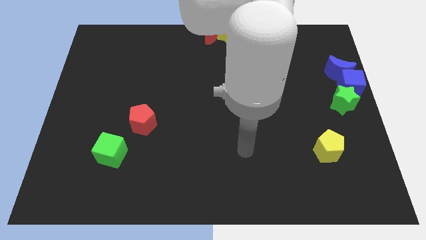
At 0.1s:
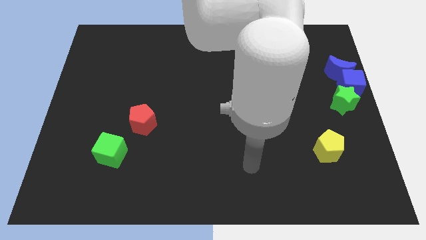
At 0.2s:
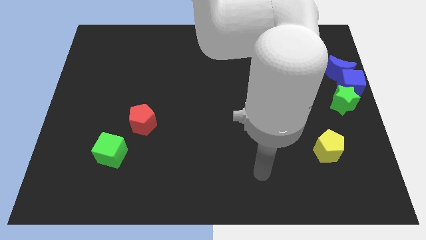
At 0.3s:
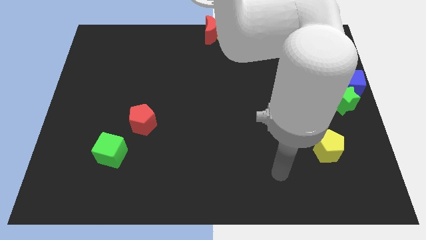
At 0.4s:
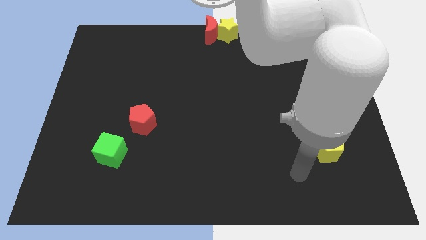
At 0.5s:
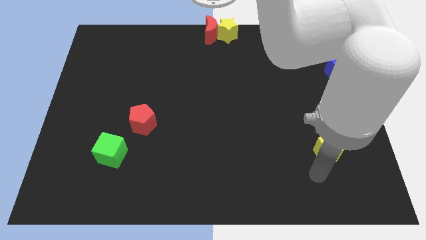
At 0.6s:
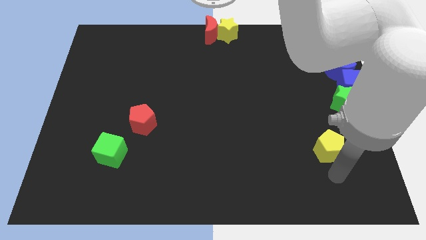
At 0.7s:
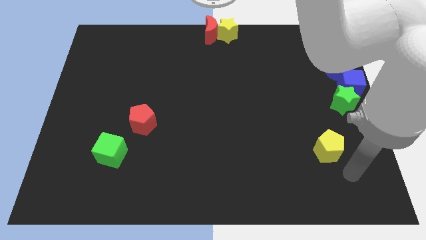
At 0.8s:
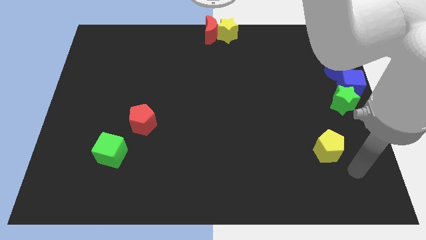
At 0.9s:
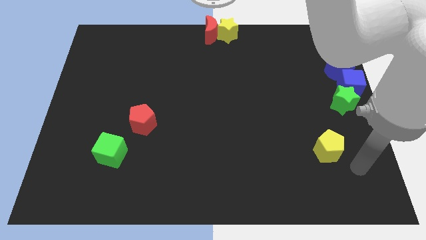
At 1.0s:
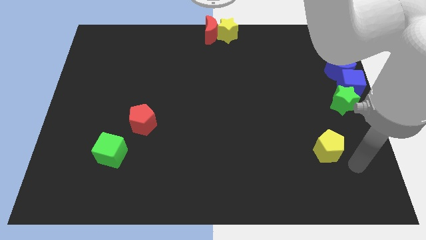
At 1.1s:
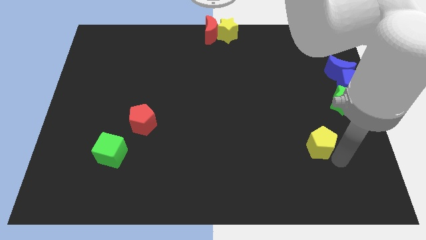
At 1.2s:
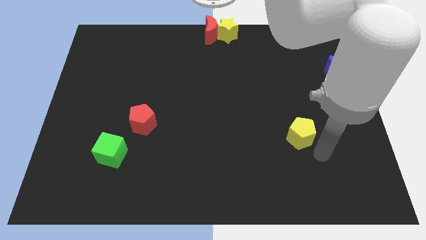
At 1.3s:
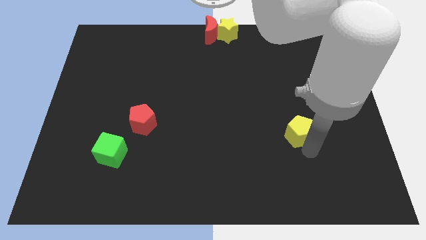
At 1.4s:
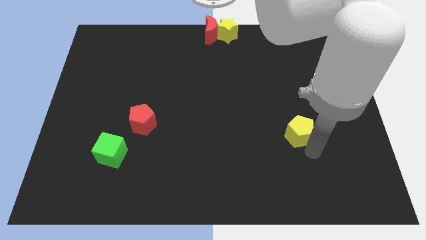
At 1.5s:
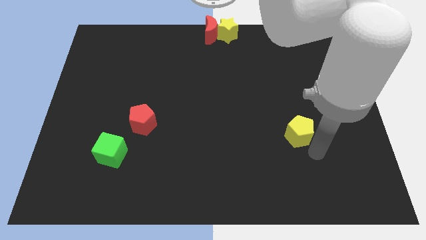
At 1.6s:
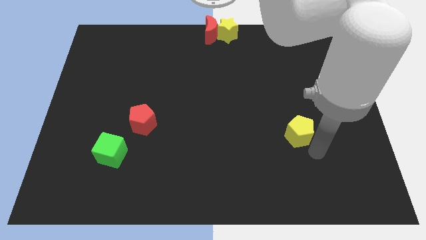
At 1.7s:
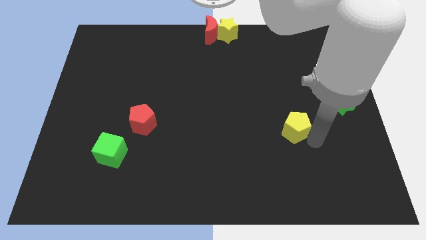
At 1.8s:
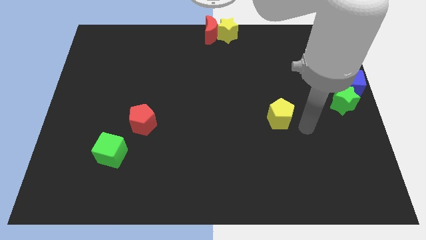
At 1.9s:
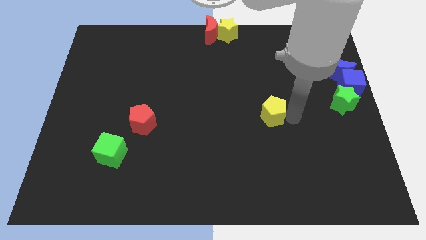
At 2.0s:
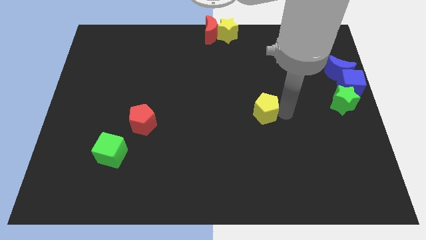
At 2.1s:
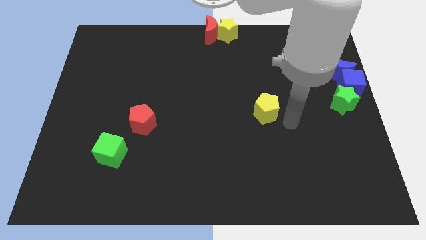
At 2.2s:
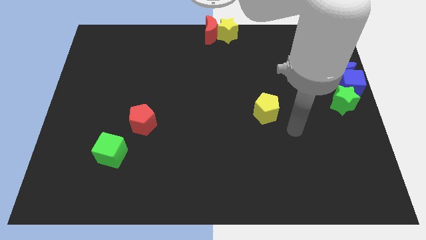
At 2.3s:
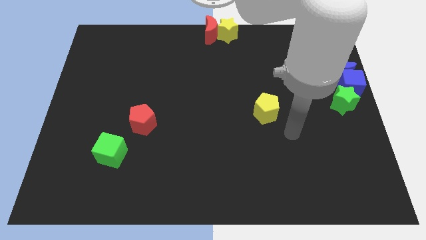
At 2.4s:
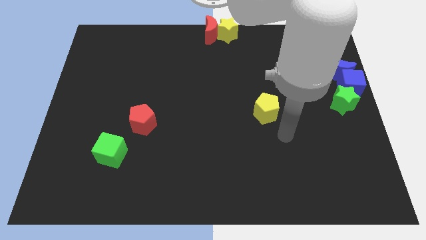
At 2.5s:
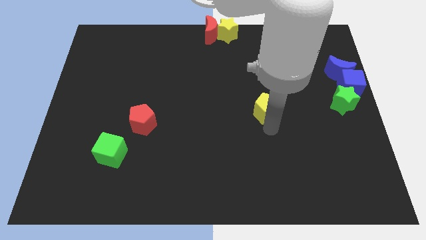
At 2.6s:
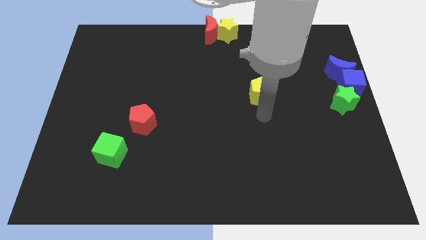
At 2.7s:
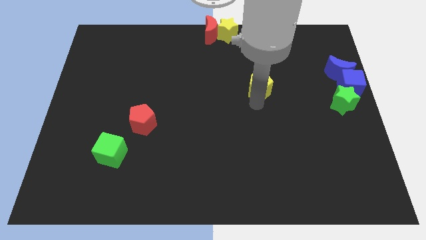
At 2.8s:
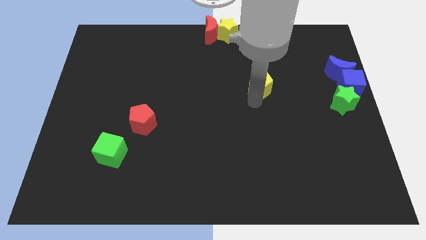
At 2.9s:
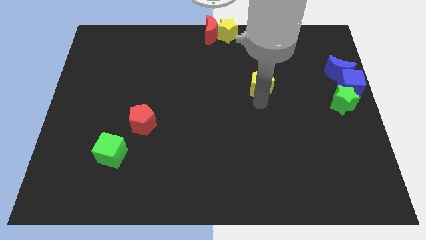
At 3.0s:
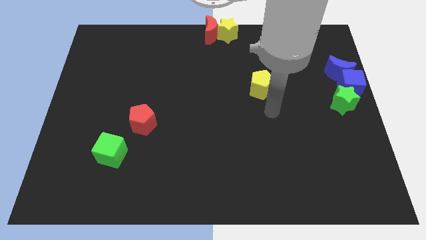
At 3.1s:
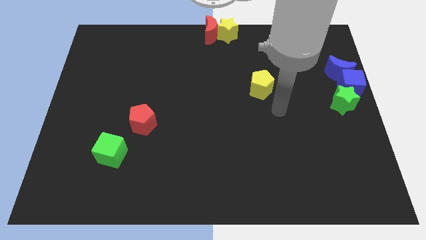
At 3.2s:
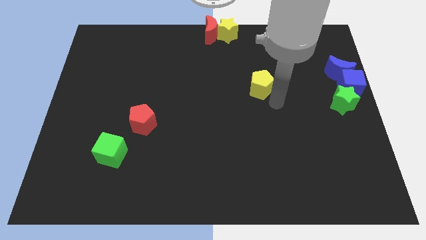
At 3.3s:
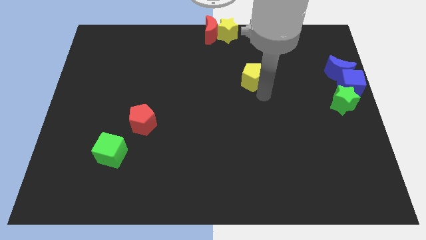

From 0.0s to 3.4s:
move the yellow pentagon towards the yellow star

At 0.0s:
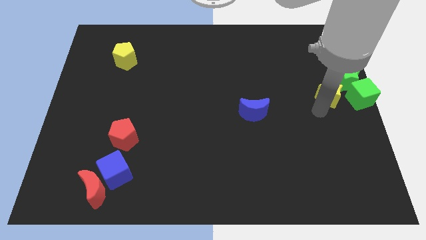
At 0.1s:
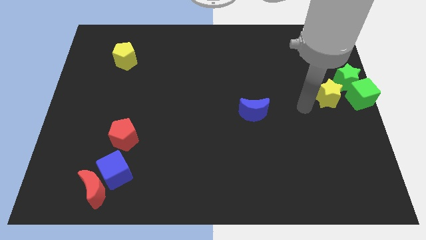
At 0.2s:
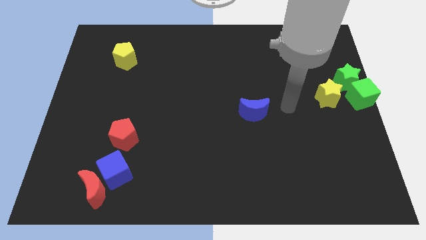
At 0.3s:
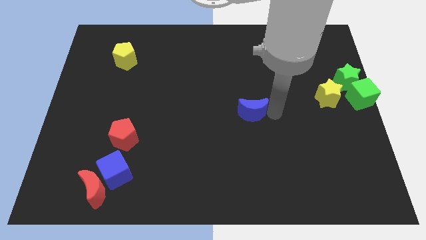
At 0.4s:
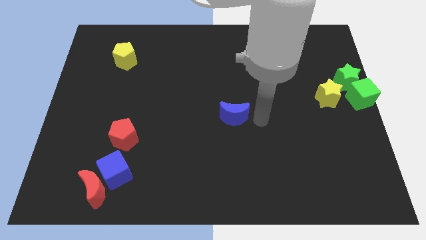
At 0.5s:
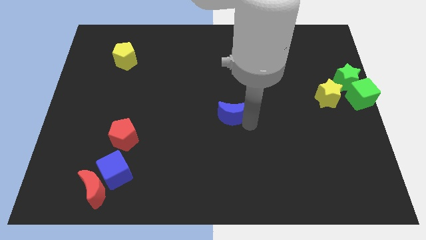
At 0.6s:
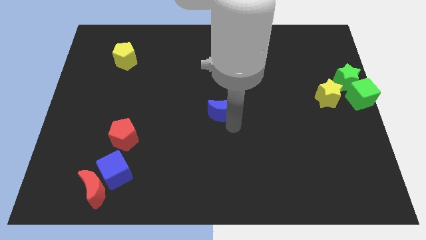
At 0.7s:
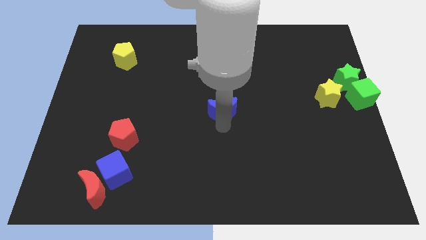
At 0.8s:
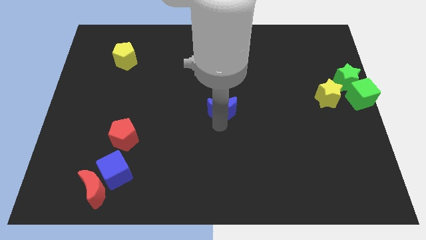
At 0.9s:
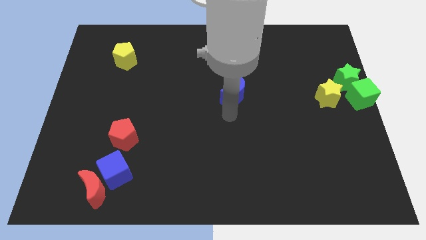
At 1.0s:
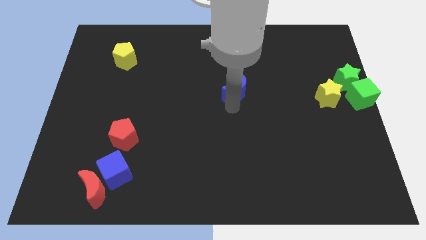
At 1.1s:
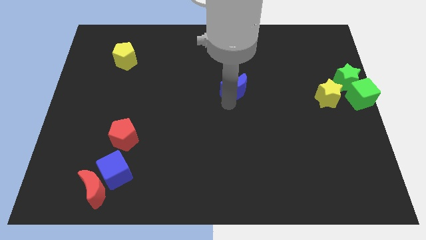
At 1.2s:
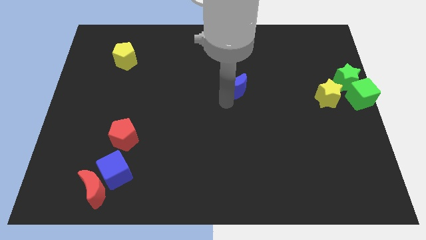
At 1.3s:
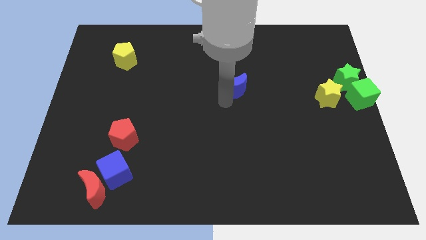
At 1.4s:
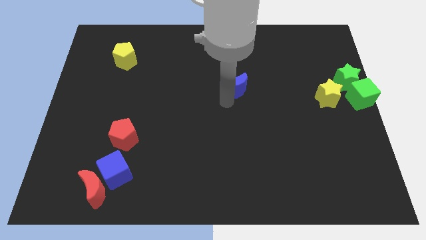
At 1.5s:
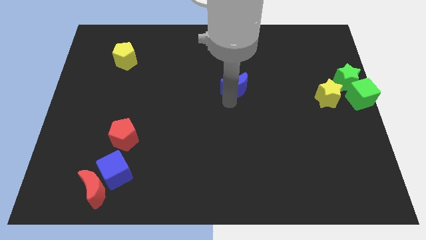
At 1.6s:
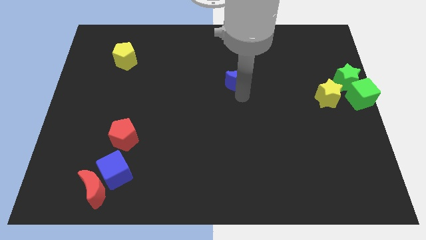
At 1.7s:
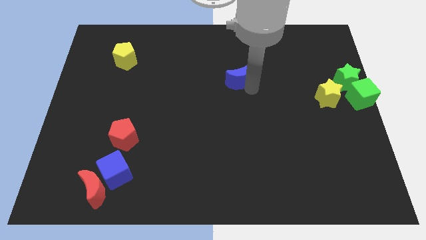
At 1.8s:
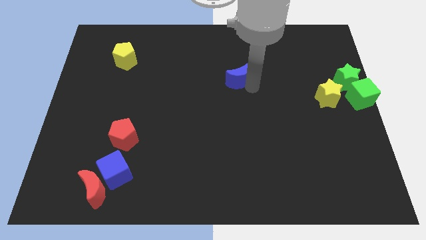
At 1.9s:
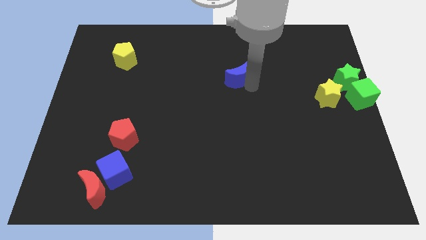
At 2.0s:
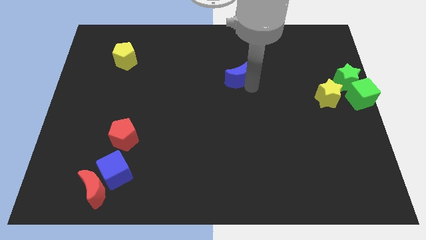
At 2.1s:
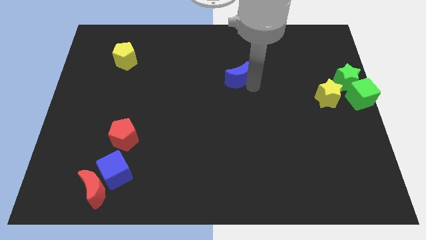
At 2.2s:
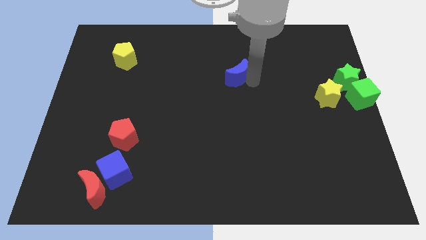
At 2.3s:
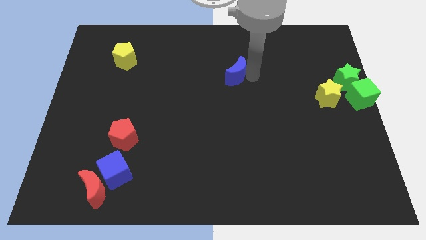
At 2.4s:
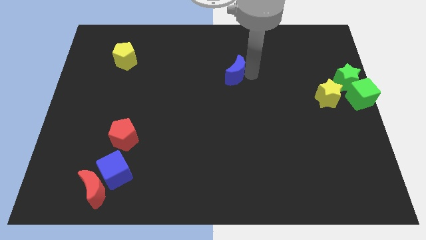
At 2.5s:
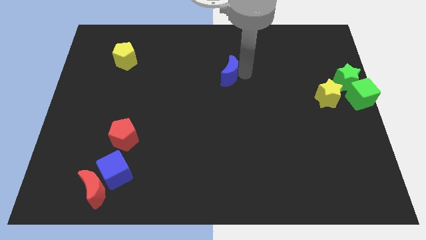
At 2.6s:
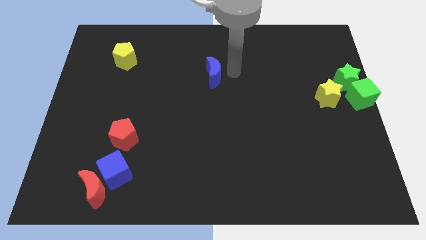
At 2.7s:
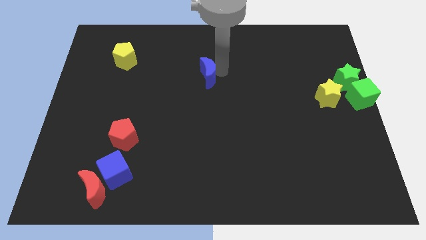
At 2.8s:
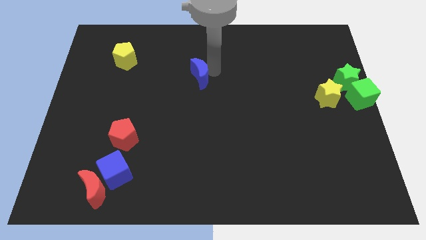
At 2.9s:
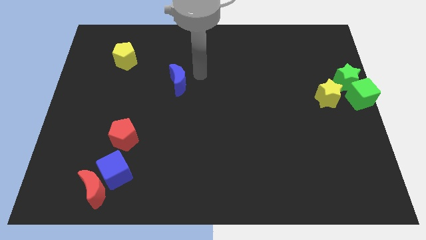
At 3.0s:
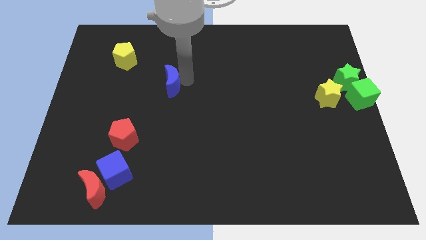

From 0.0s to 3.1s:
push the blue crescent towards the yellow pentagon

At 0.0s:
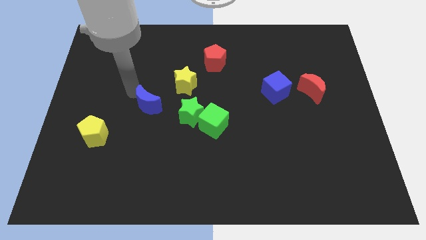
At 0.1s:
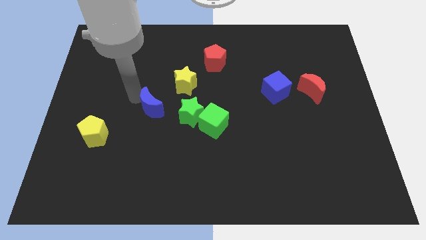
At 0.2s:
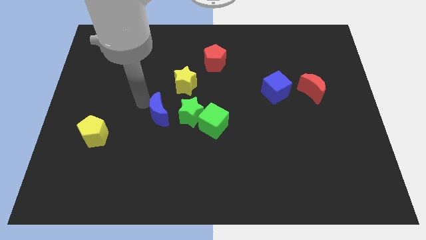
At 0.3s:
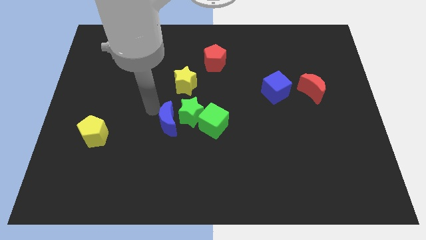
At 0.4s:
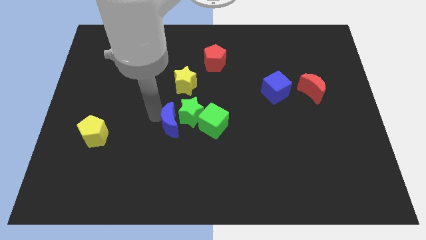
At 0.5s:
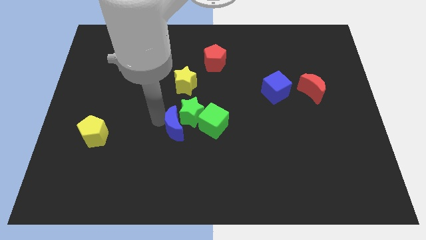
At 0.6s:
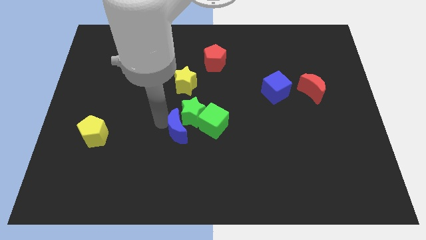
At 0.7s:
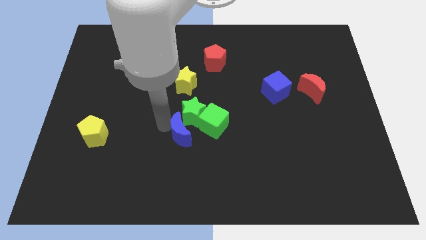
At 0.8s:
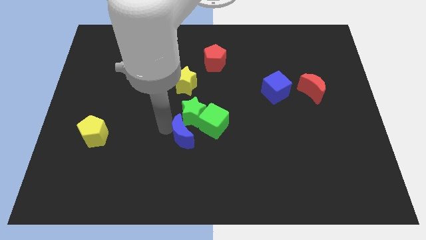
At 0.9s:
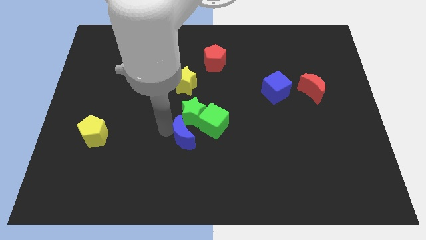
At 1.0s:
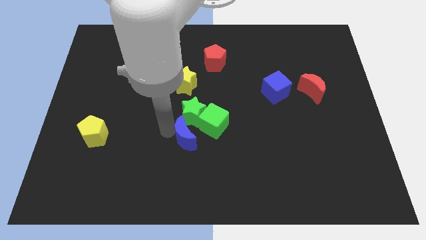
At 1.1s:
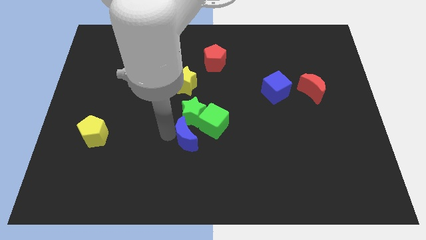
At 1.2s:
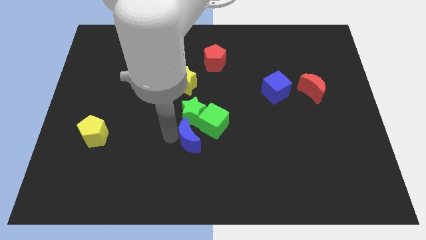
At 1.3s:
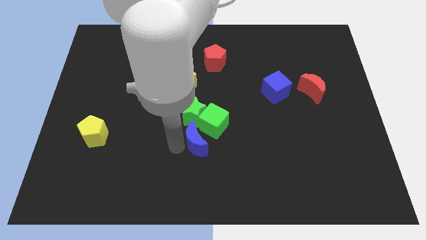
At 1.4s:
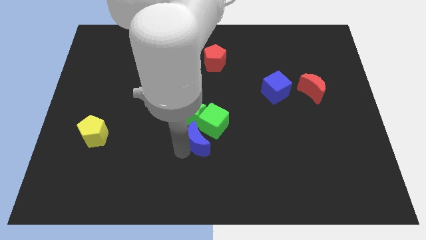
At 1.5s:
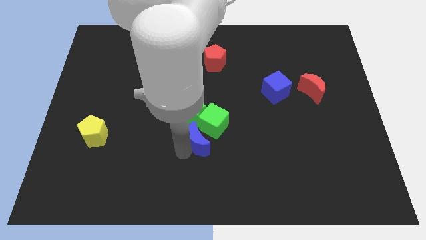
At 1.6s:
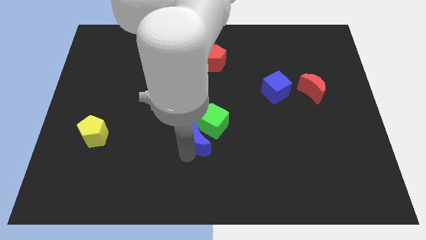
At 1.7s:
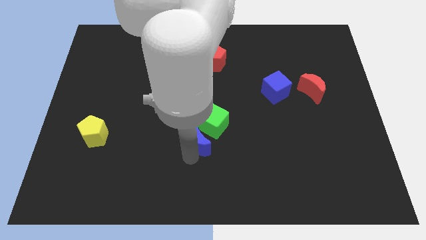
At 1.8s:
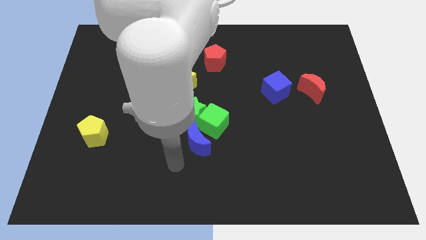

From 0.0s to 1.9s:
push the blue moon to the bottom of the green star

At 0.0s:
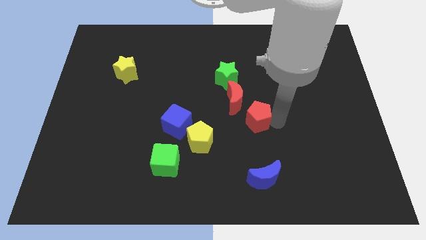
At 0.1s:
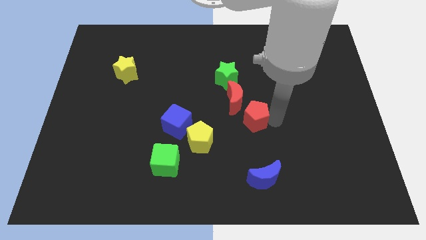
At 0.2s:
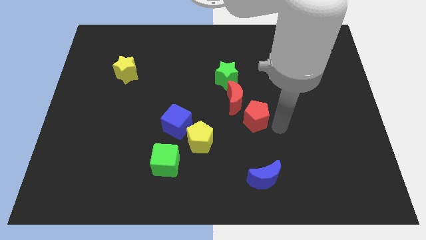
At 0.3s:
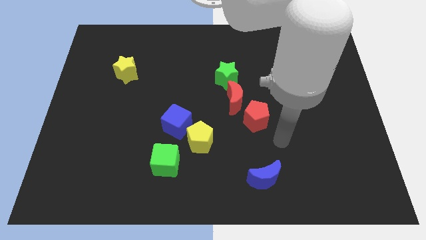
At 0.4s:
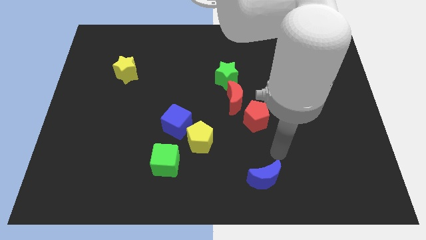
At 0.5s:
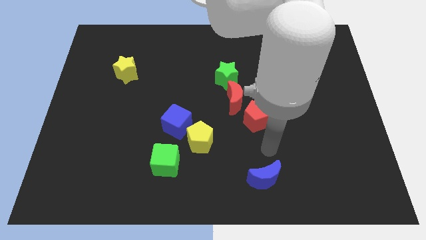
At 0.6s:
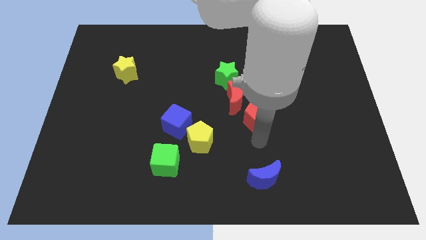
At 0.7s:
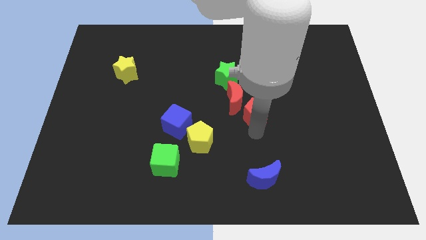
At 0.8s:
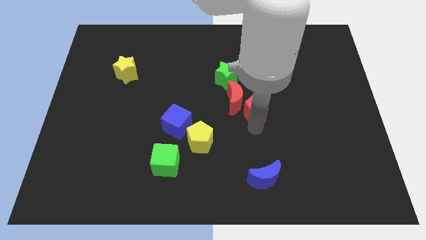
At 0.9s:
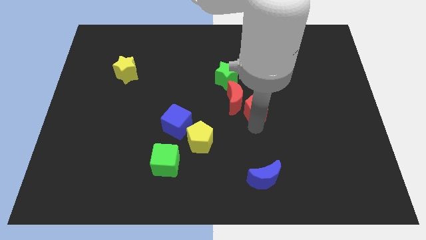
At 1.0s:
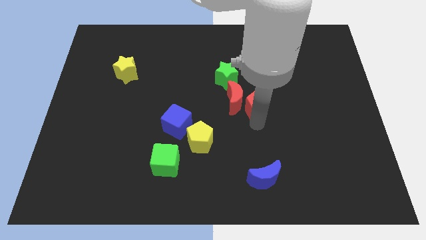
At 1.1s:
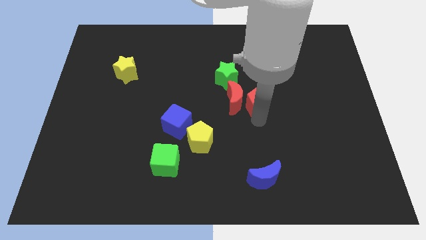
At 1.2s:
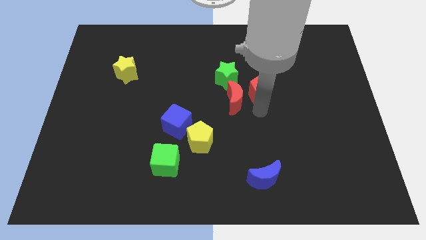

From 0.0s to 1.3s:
place red pentagon to the right of red moon
